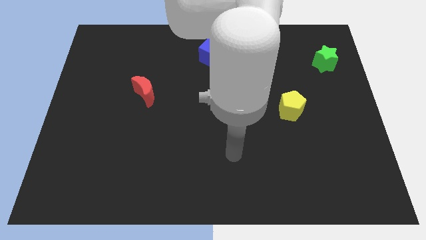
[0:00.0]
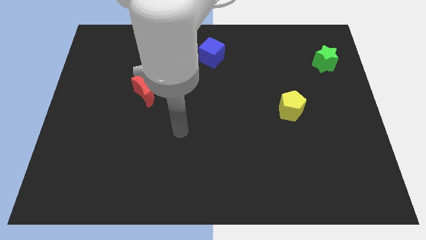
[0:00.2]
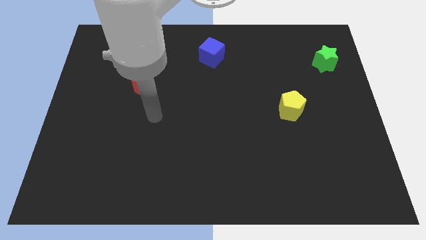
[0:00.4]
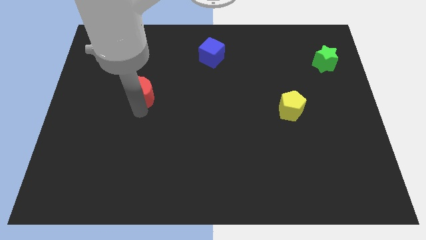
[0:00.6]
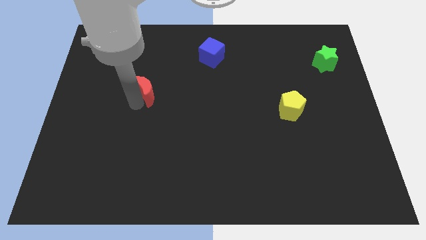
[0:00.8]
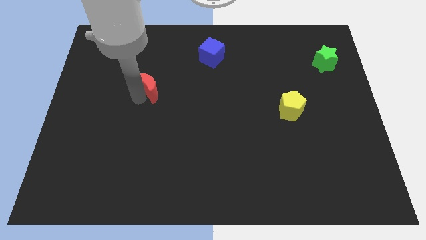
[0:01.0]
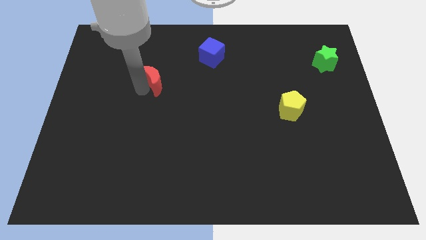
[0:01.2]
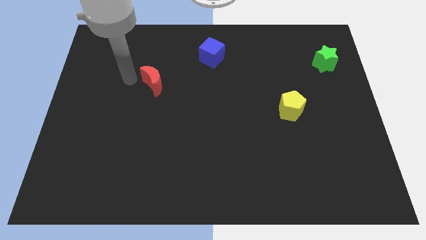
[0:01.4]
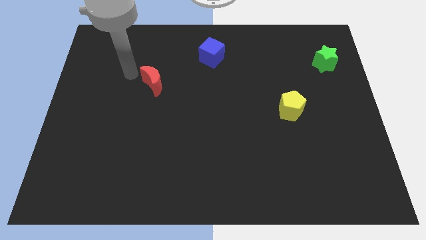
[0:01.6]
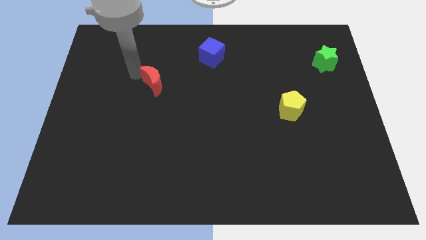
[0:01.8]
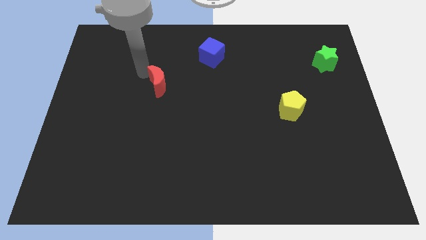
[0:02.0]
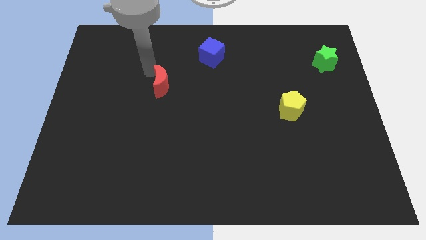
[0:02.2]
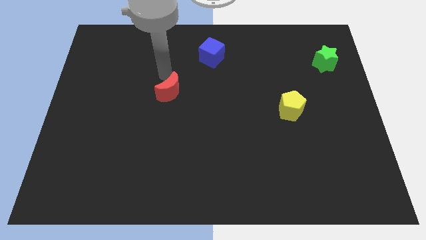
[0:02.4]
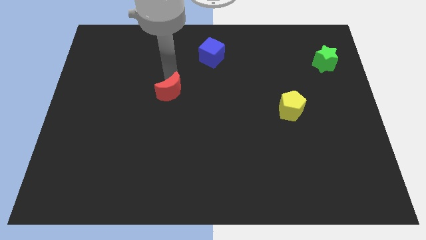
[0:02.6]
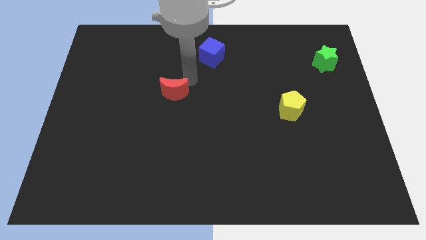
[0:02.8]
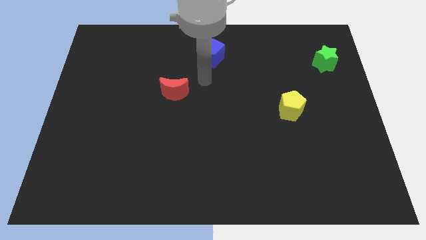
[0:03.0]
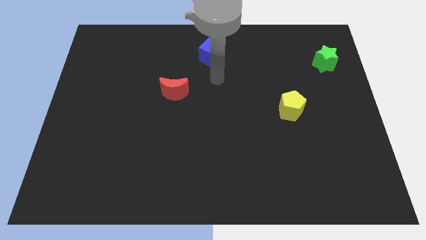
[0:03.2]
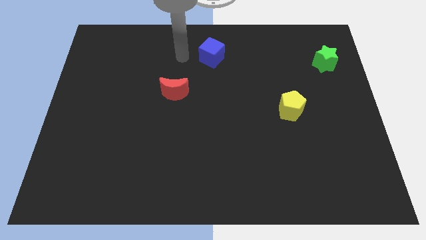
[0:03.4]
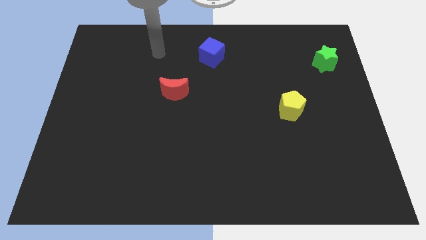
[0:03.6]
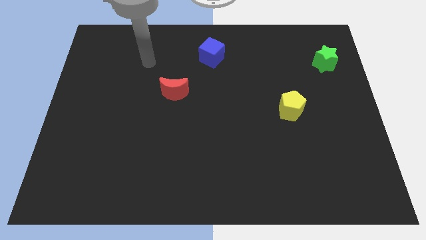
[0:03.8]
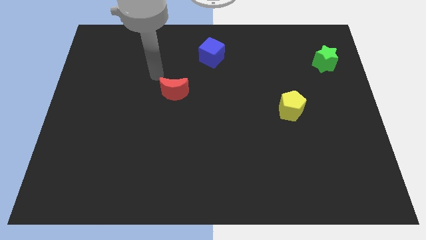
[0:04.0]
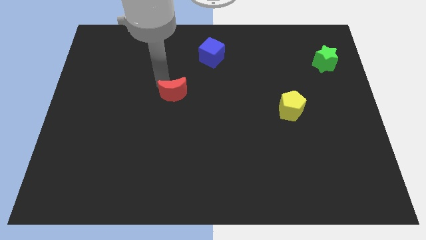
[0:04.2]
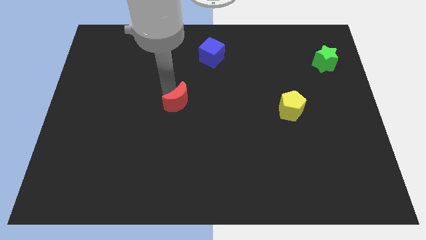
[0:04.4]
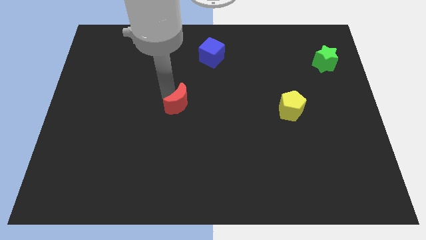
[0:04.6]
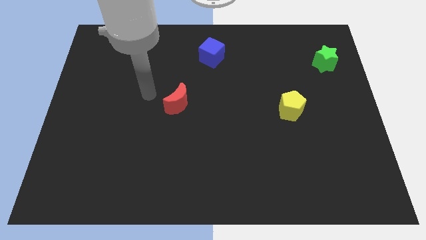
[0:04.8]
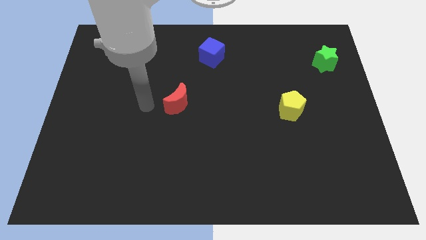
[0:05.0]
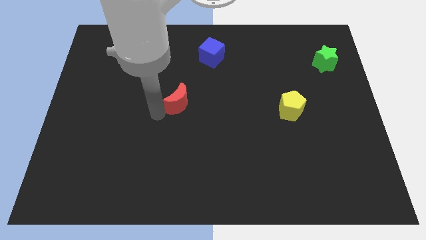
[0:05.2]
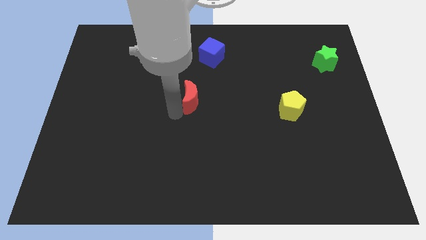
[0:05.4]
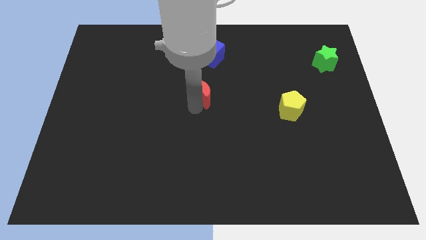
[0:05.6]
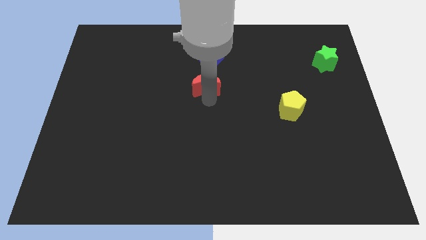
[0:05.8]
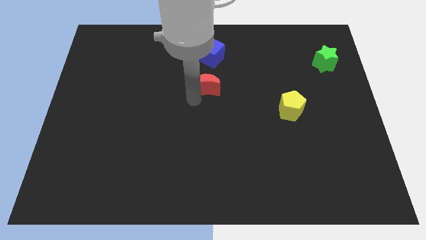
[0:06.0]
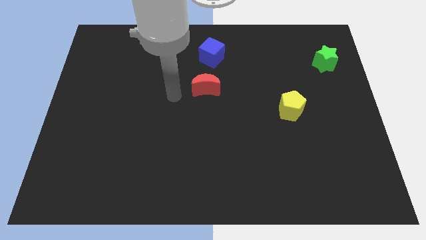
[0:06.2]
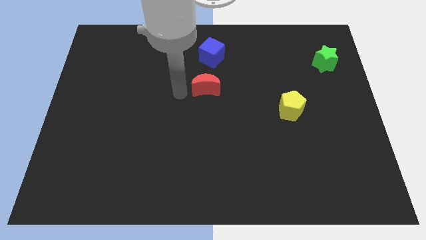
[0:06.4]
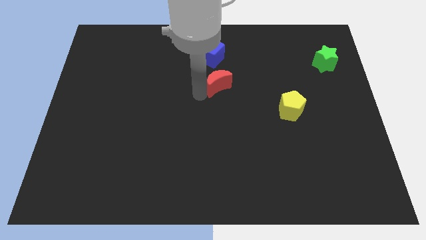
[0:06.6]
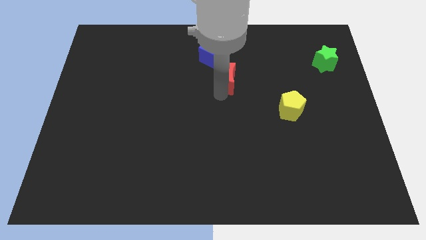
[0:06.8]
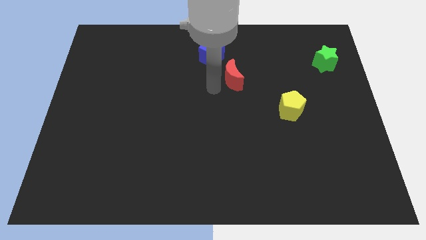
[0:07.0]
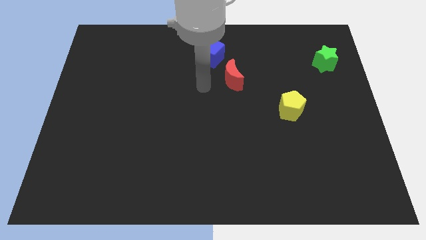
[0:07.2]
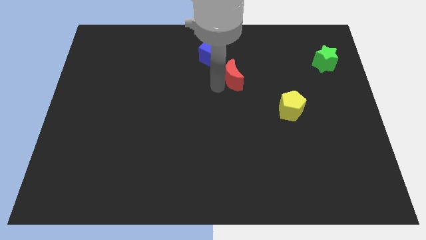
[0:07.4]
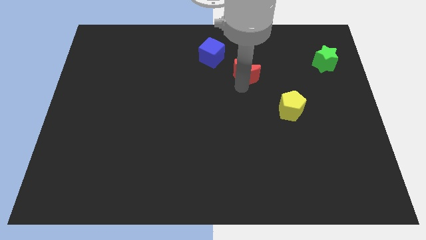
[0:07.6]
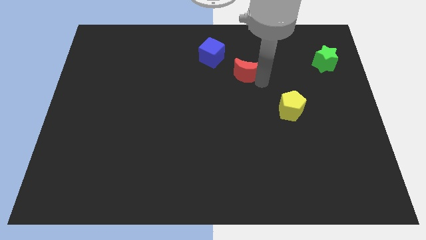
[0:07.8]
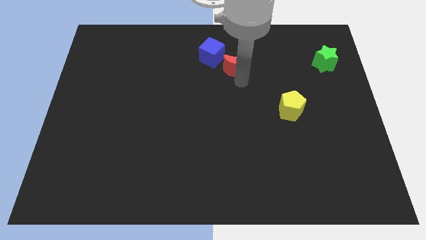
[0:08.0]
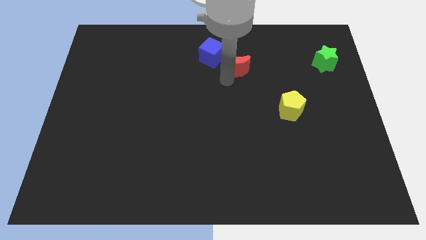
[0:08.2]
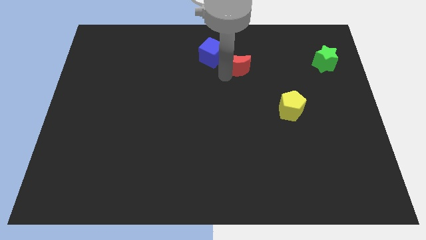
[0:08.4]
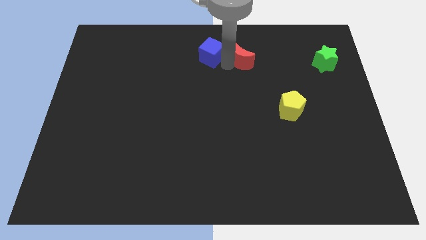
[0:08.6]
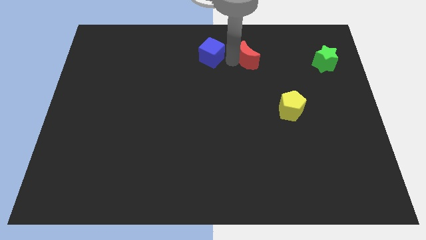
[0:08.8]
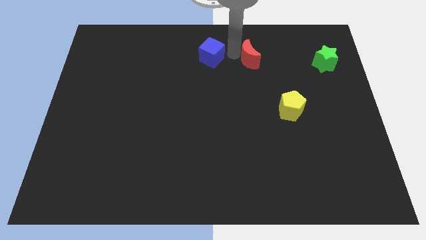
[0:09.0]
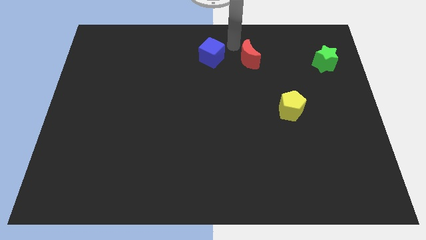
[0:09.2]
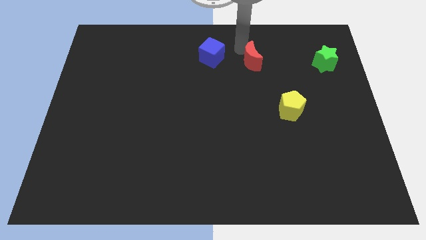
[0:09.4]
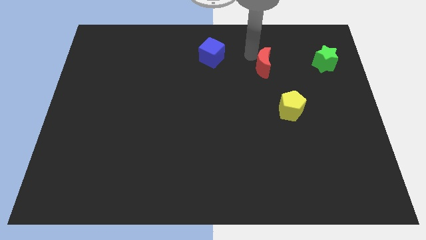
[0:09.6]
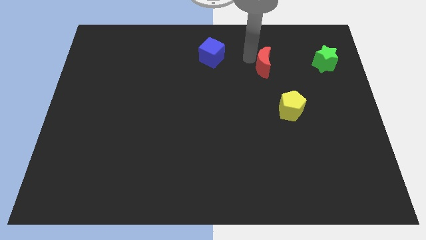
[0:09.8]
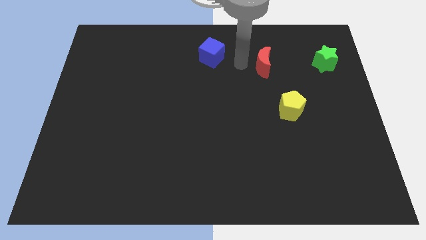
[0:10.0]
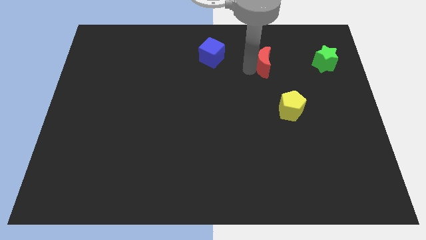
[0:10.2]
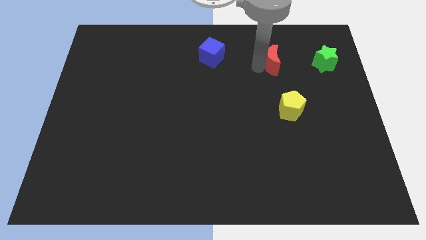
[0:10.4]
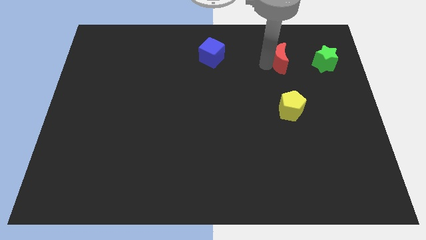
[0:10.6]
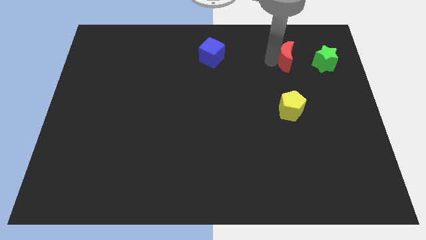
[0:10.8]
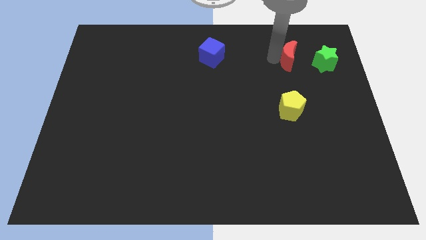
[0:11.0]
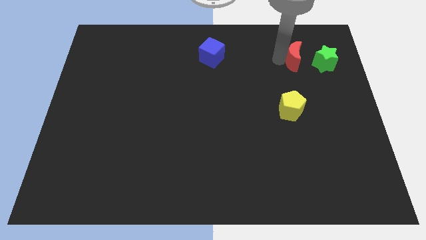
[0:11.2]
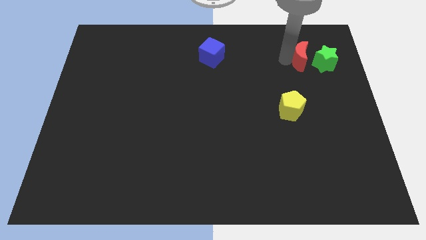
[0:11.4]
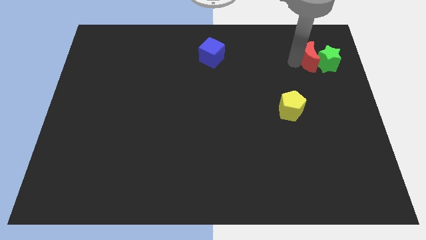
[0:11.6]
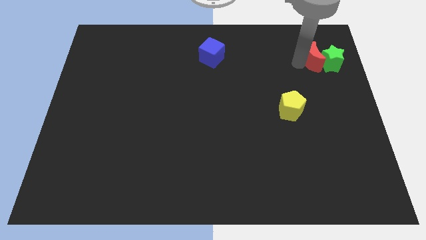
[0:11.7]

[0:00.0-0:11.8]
slide the moon close to the green star

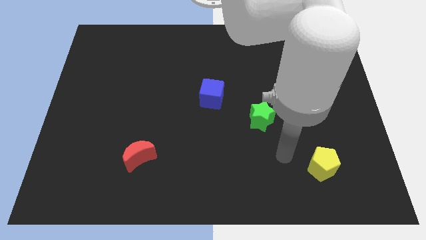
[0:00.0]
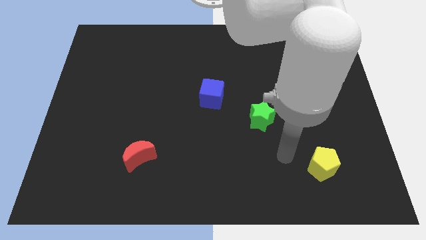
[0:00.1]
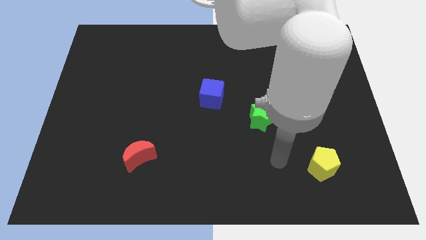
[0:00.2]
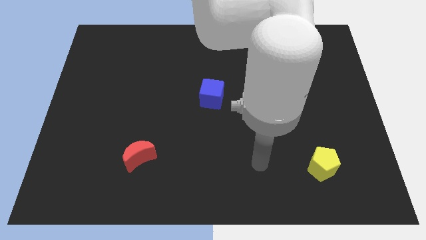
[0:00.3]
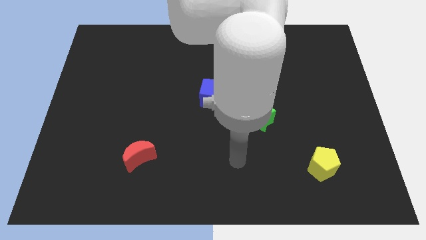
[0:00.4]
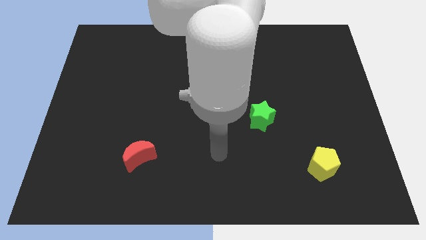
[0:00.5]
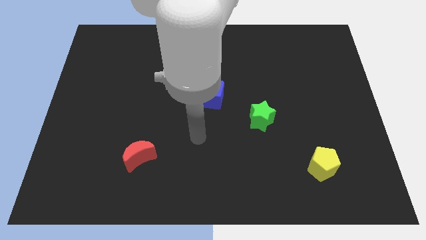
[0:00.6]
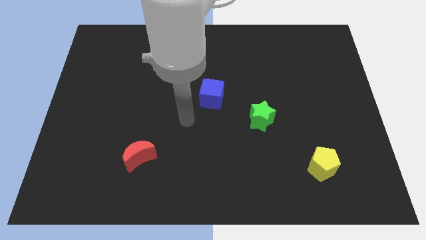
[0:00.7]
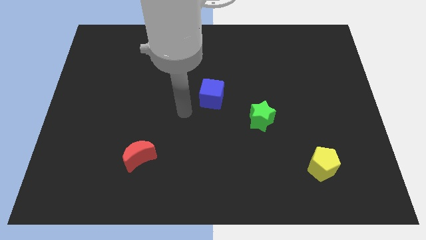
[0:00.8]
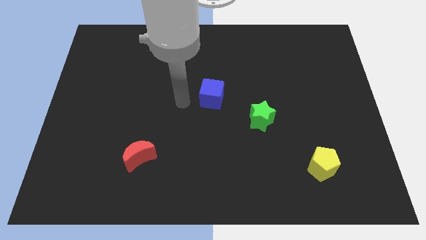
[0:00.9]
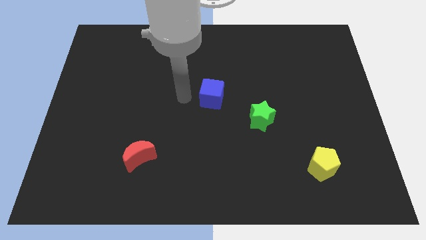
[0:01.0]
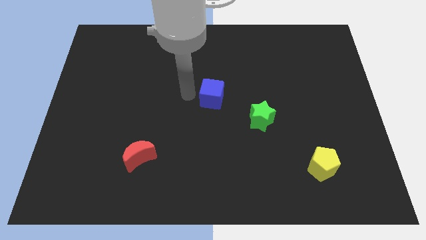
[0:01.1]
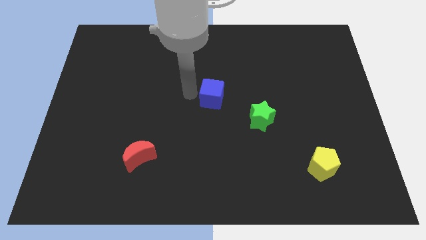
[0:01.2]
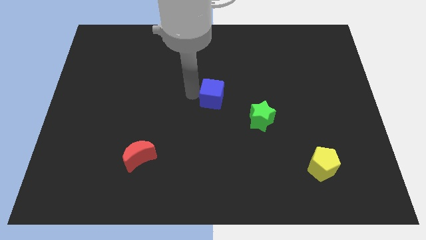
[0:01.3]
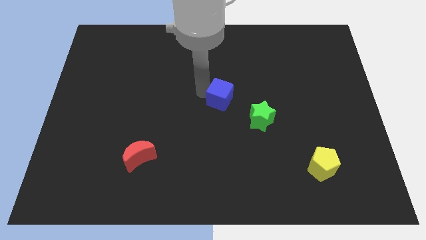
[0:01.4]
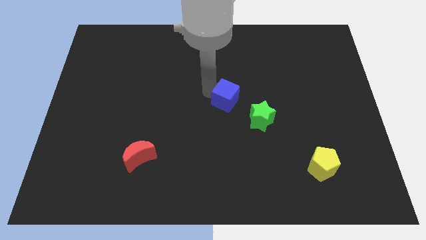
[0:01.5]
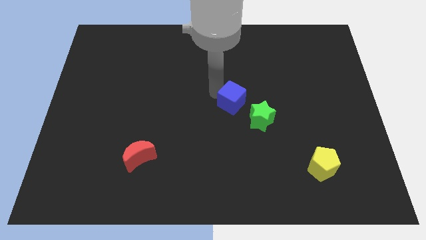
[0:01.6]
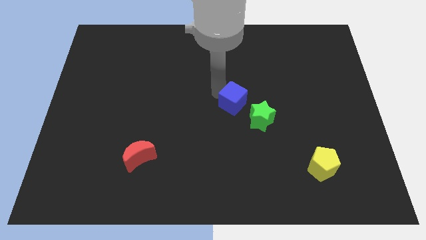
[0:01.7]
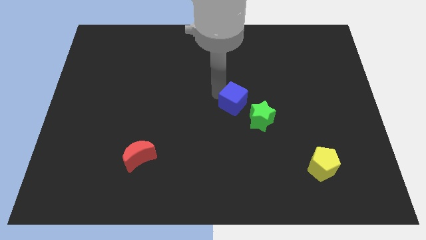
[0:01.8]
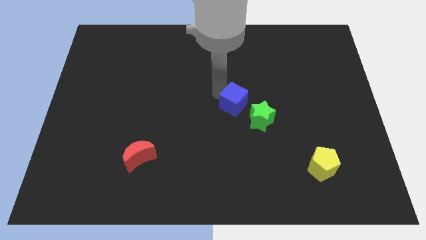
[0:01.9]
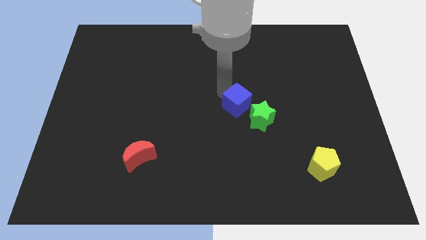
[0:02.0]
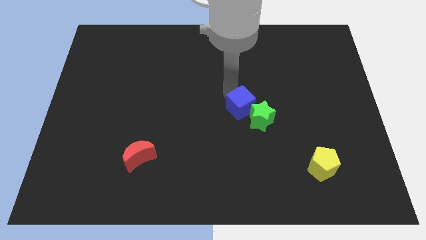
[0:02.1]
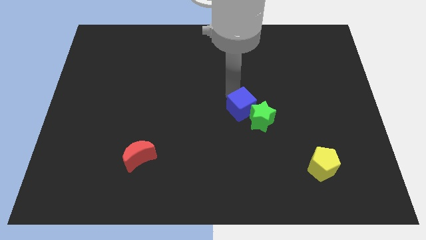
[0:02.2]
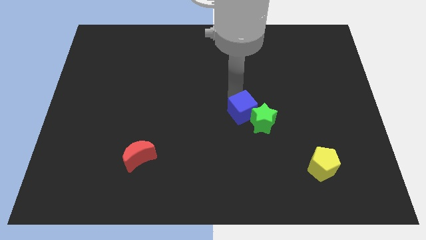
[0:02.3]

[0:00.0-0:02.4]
slide the cube next to the star

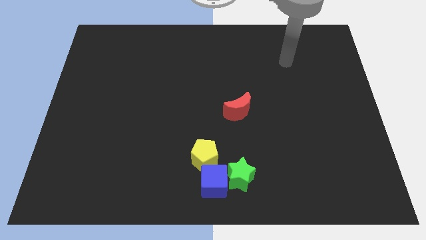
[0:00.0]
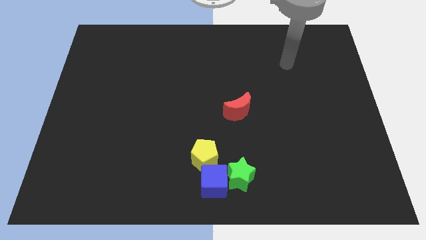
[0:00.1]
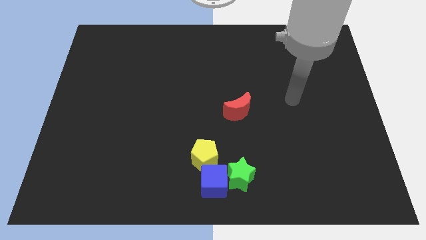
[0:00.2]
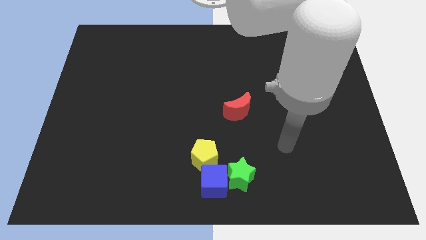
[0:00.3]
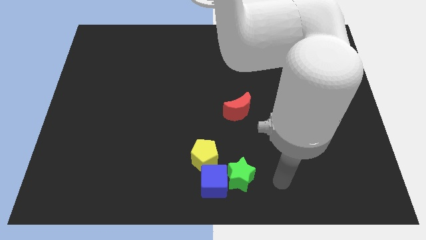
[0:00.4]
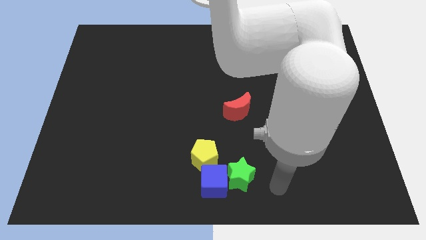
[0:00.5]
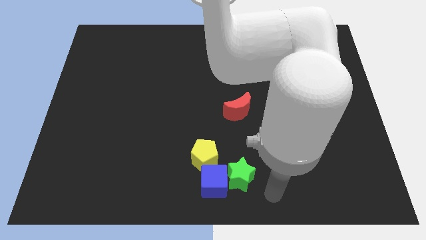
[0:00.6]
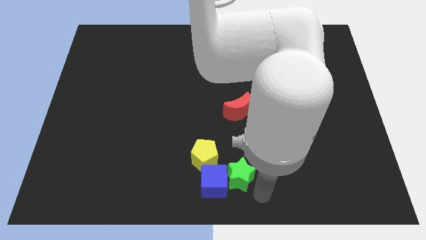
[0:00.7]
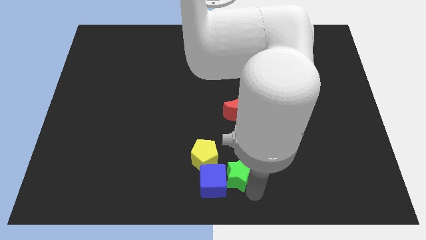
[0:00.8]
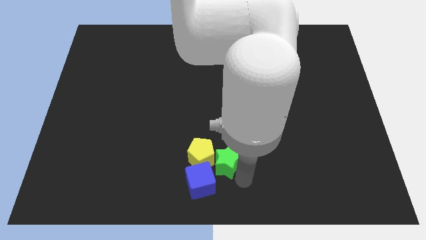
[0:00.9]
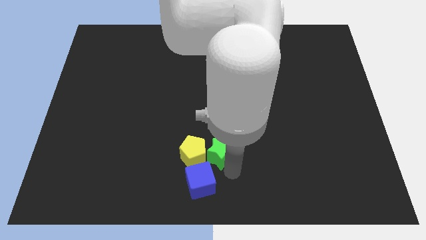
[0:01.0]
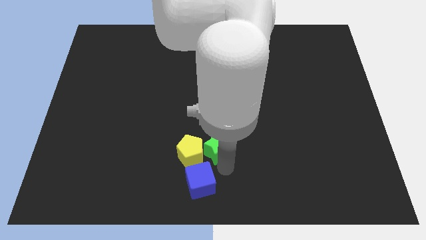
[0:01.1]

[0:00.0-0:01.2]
slide the star towards the yellow pentagon
